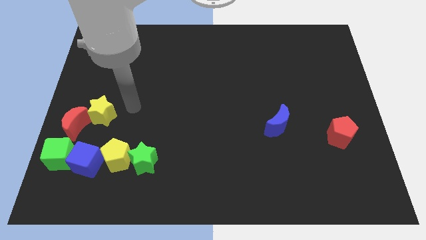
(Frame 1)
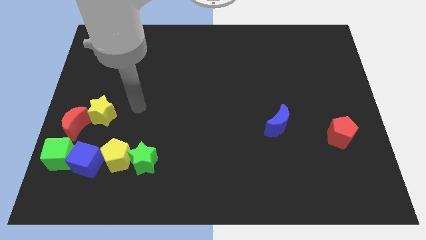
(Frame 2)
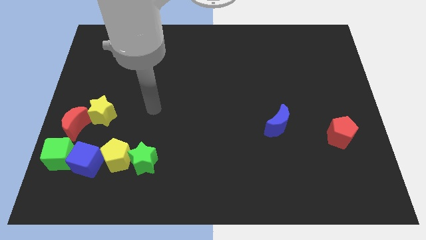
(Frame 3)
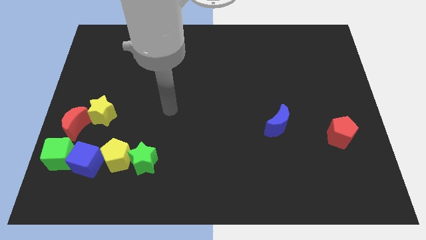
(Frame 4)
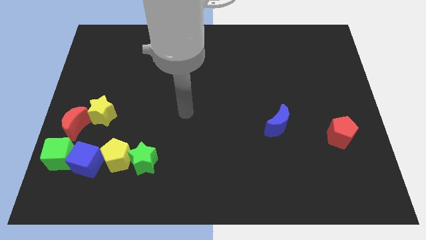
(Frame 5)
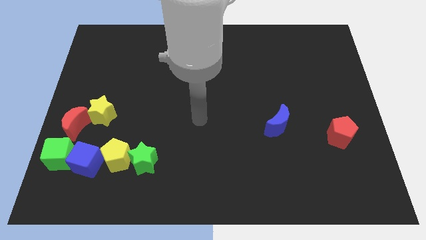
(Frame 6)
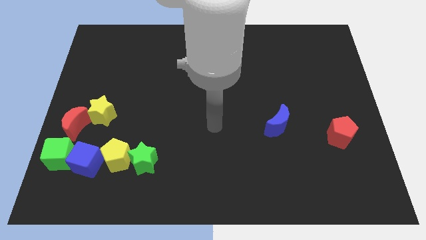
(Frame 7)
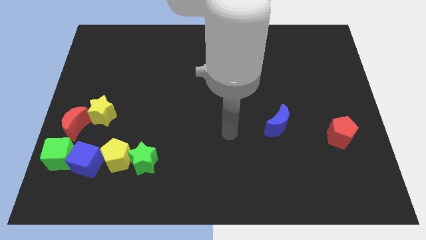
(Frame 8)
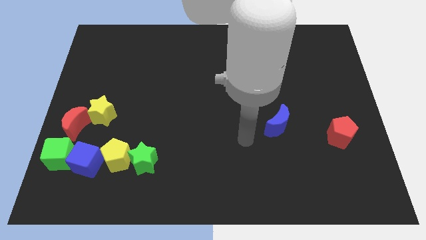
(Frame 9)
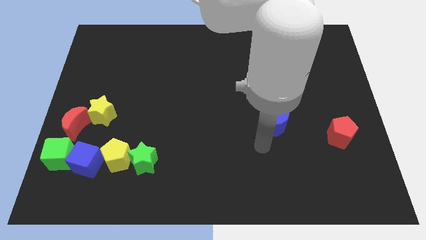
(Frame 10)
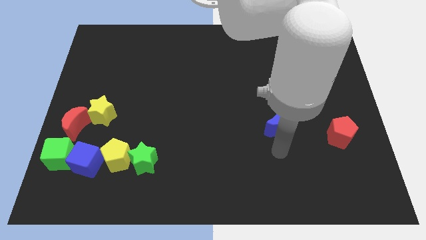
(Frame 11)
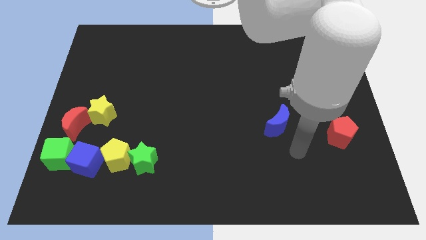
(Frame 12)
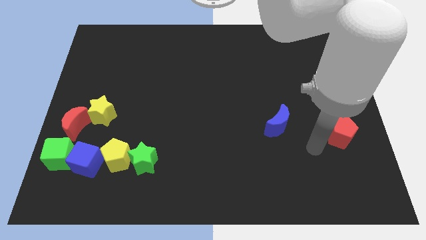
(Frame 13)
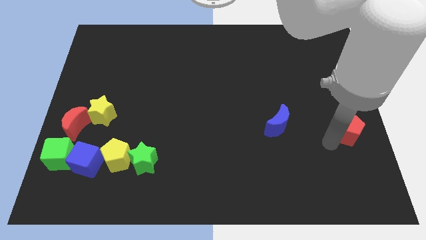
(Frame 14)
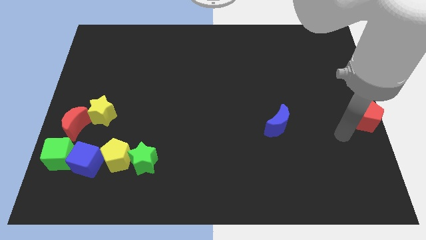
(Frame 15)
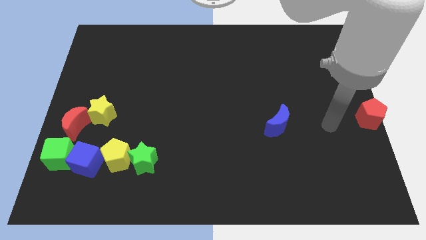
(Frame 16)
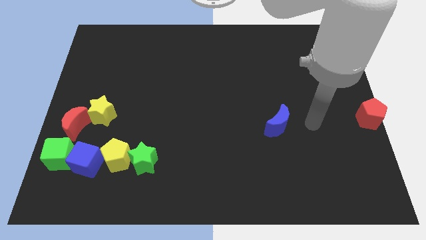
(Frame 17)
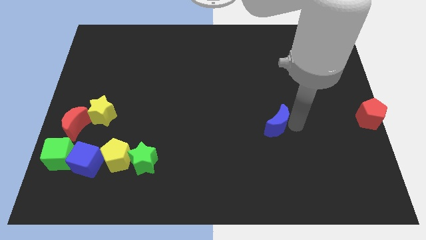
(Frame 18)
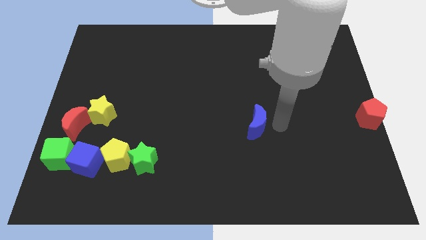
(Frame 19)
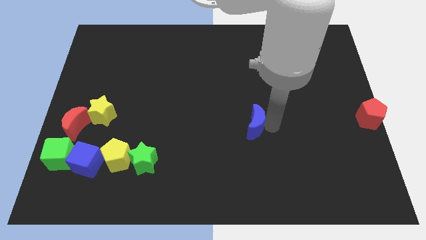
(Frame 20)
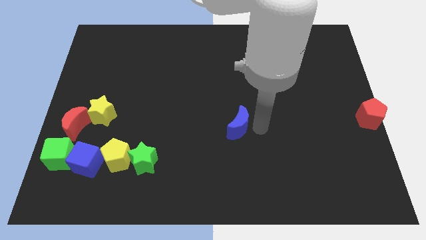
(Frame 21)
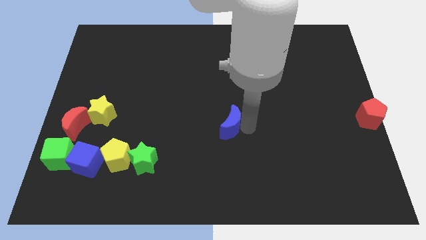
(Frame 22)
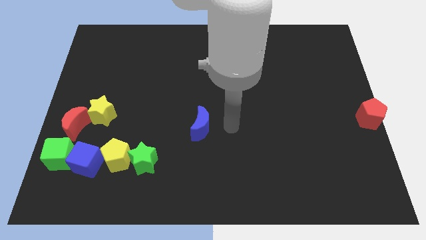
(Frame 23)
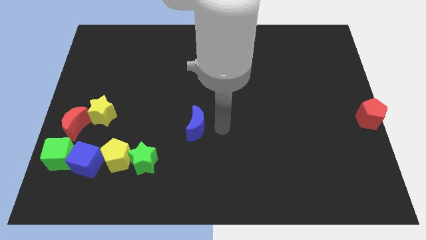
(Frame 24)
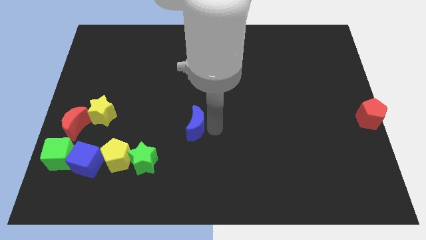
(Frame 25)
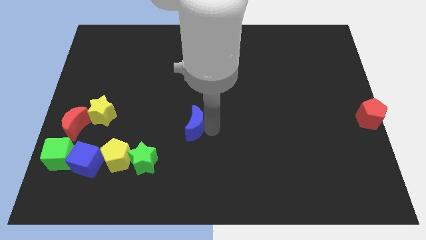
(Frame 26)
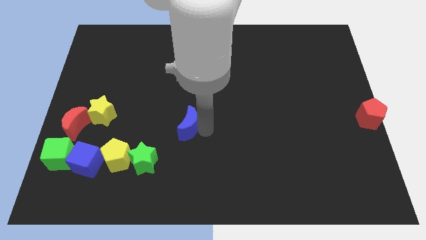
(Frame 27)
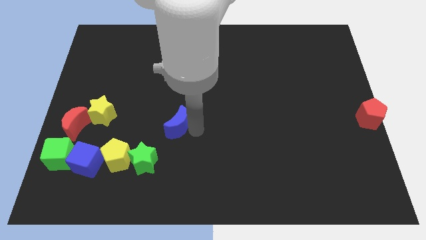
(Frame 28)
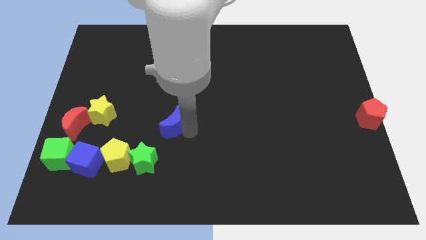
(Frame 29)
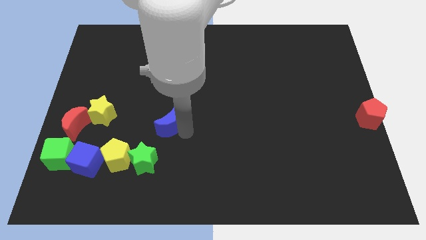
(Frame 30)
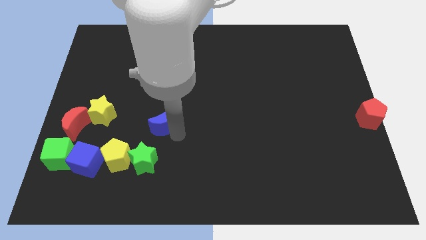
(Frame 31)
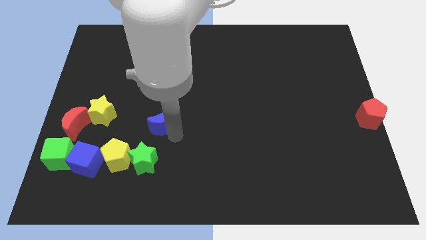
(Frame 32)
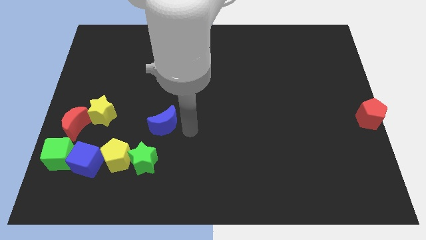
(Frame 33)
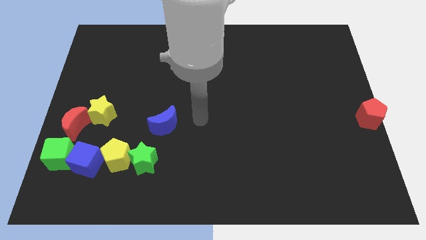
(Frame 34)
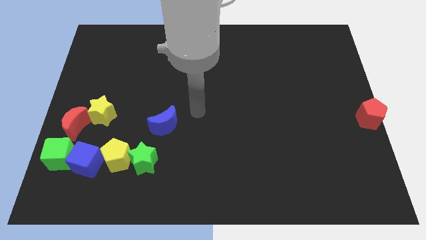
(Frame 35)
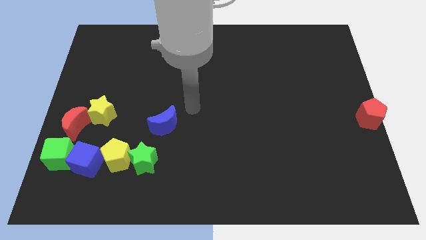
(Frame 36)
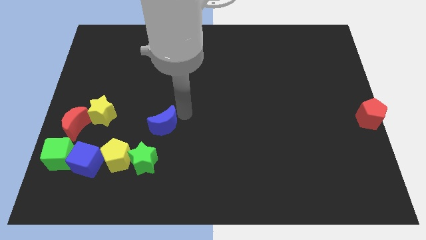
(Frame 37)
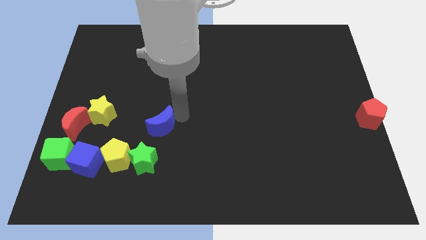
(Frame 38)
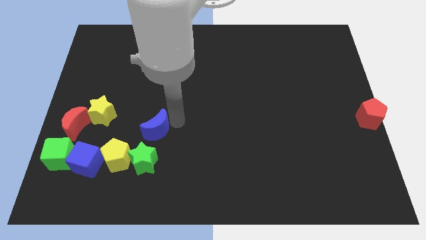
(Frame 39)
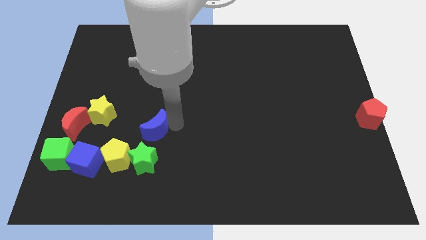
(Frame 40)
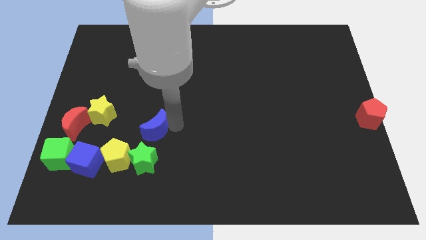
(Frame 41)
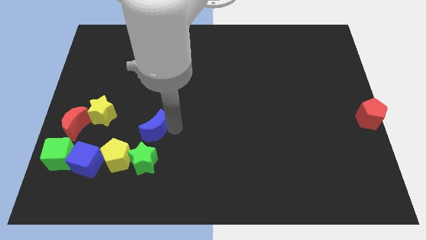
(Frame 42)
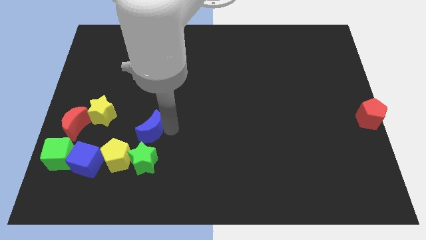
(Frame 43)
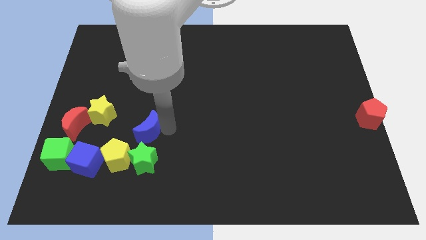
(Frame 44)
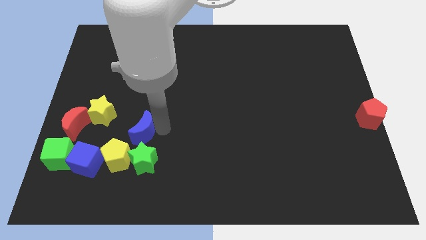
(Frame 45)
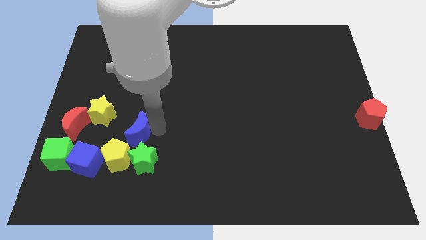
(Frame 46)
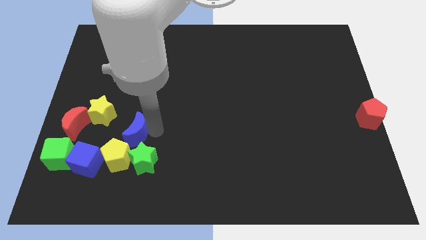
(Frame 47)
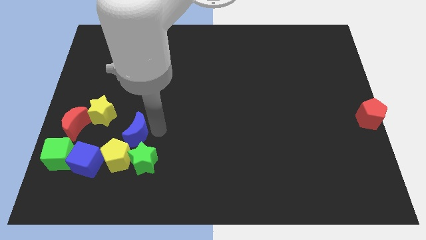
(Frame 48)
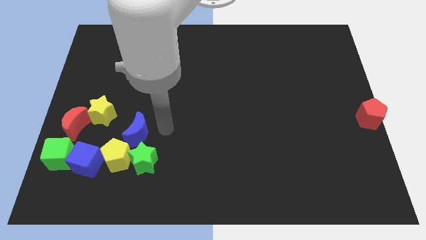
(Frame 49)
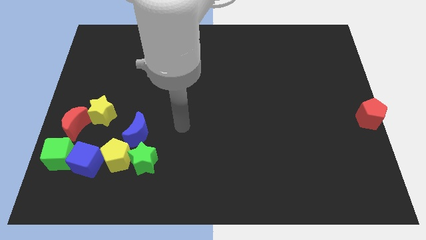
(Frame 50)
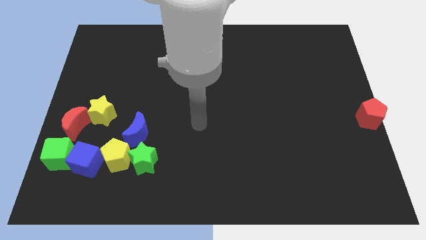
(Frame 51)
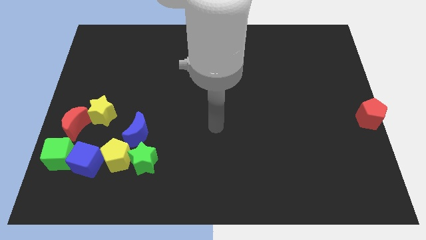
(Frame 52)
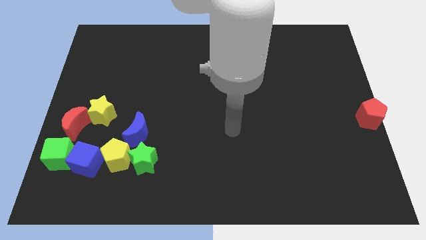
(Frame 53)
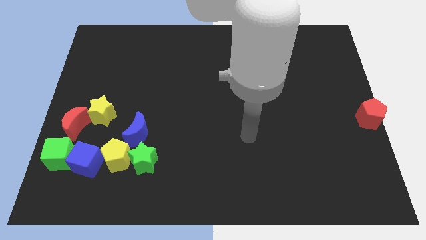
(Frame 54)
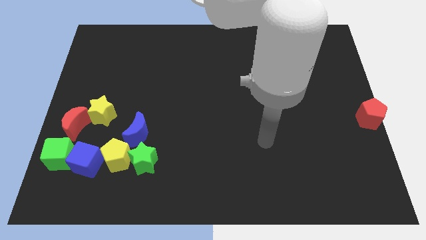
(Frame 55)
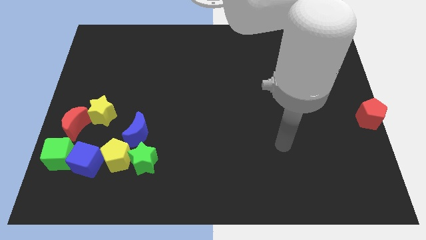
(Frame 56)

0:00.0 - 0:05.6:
place the blue crescent above the yellow pentagon

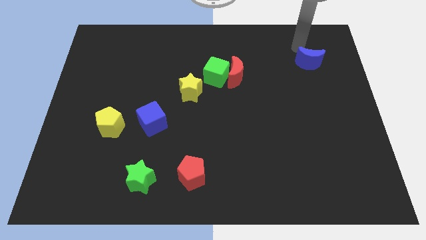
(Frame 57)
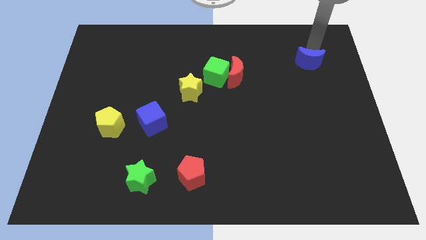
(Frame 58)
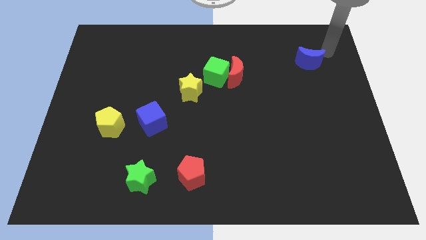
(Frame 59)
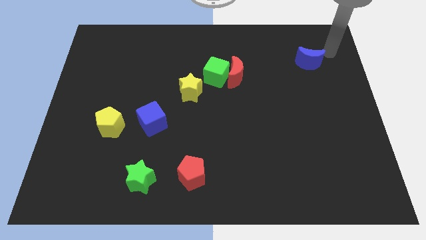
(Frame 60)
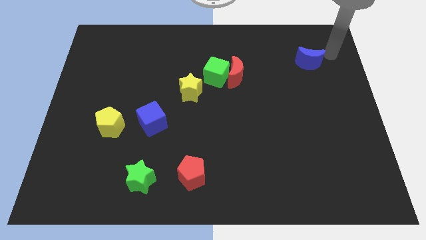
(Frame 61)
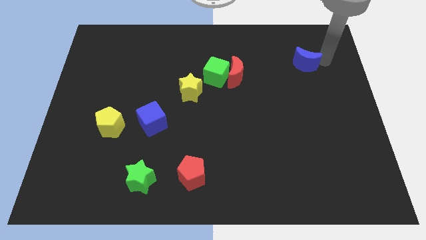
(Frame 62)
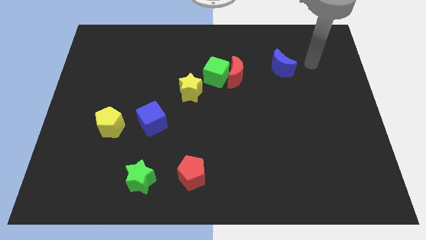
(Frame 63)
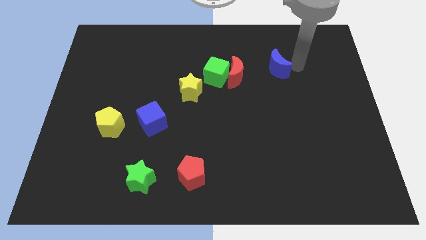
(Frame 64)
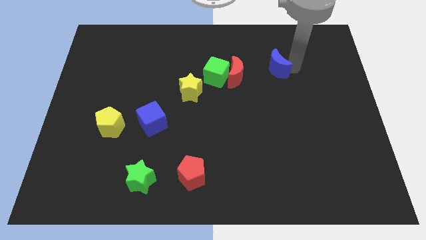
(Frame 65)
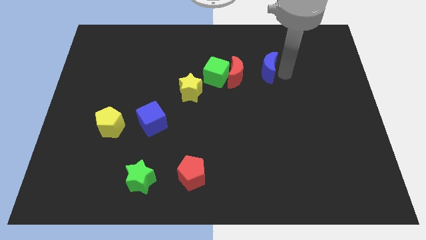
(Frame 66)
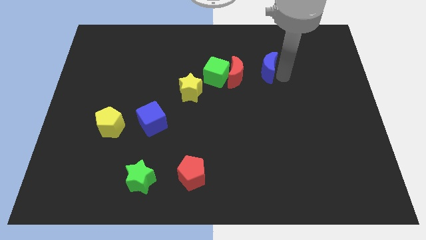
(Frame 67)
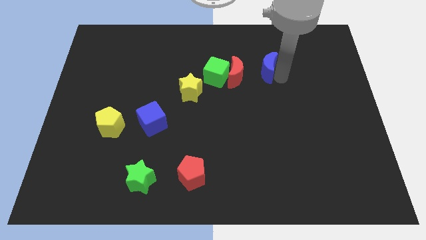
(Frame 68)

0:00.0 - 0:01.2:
push the blue cube towards the red crescent

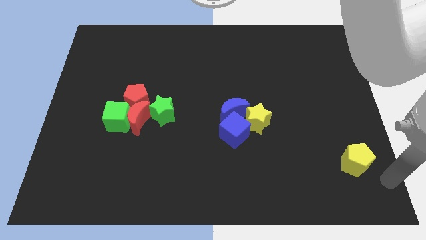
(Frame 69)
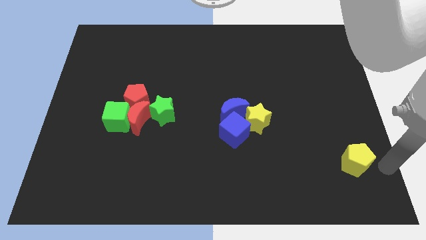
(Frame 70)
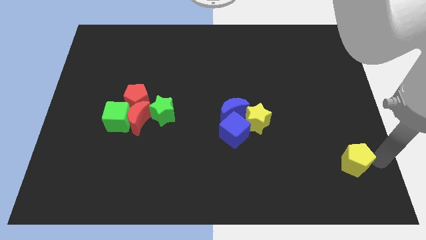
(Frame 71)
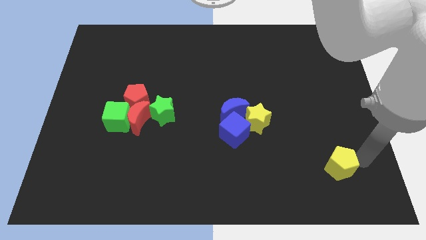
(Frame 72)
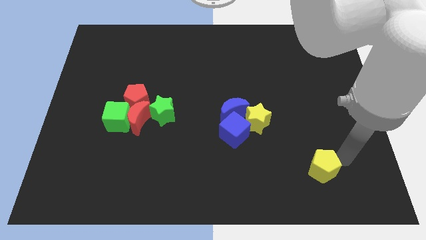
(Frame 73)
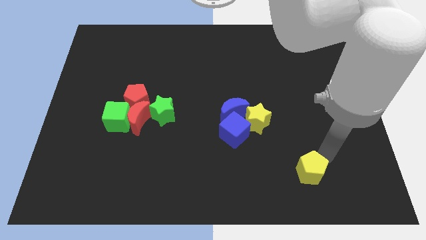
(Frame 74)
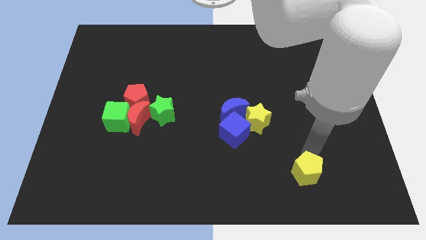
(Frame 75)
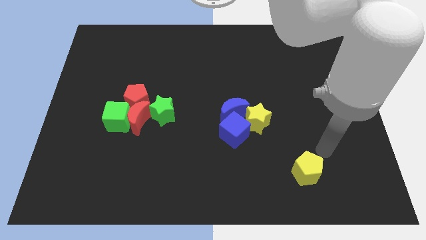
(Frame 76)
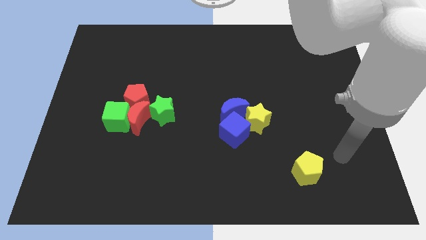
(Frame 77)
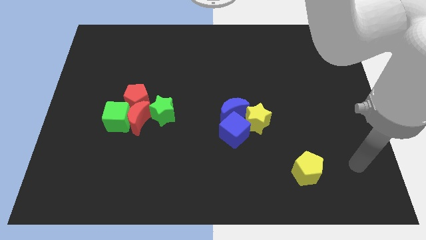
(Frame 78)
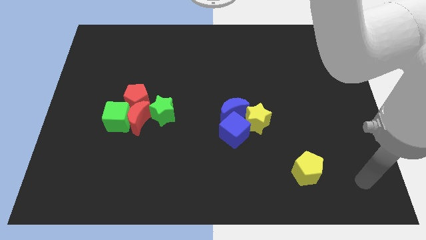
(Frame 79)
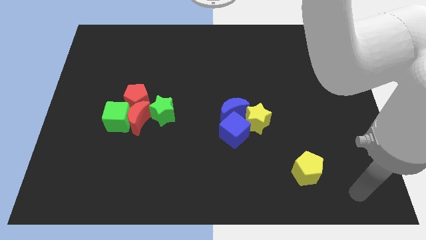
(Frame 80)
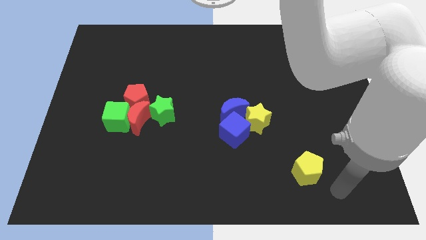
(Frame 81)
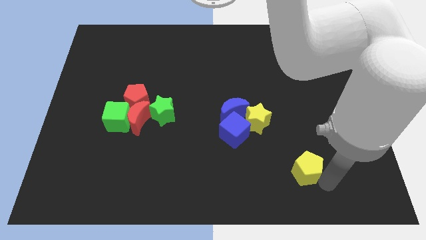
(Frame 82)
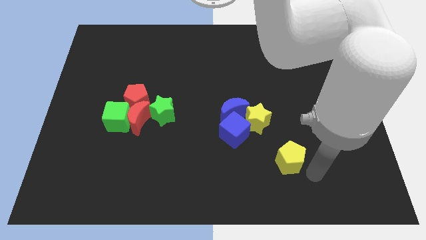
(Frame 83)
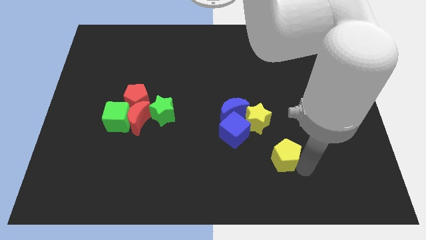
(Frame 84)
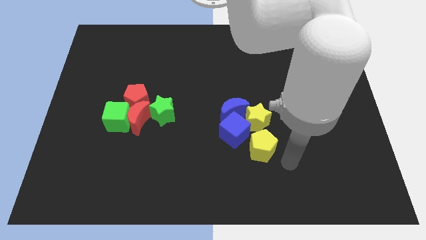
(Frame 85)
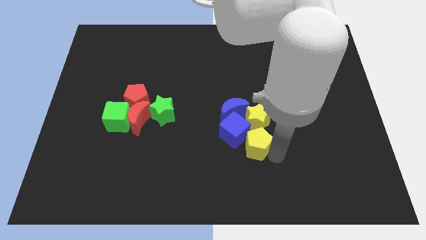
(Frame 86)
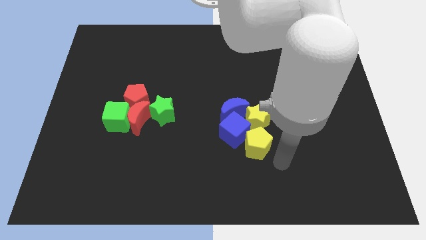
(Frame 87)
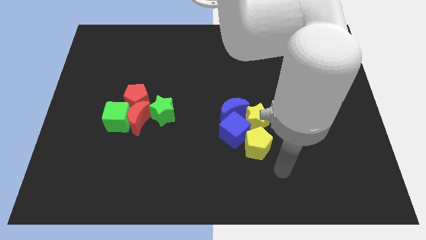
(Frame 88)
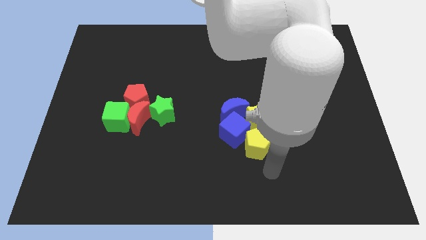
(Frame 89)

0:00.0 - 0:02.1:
push yellow pentagon to the bottom of yellow star
